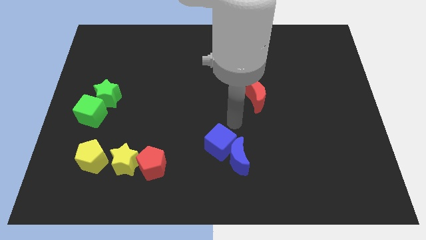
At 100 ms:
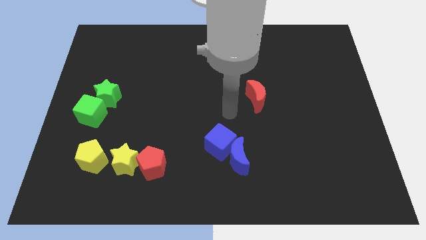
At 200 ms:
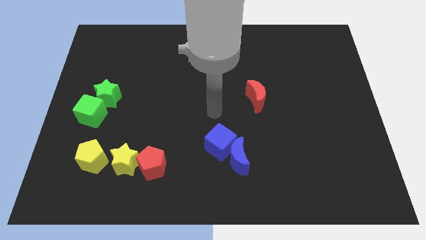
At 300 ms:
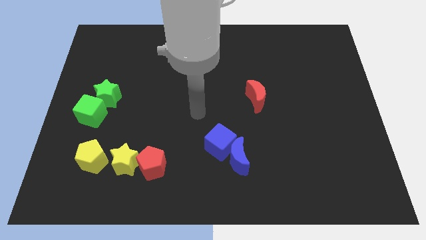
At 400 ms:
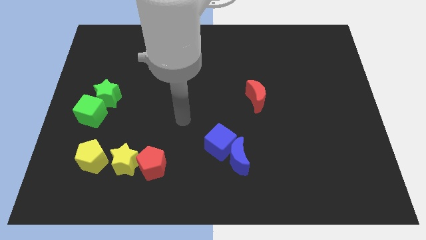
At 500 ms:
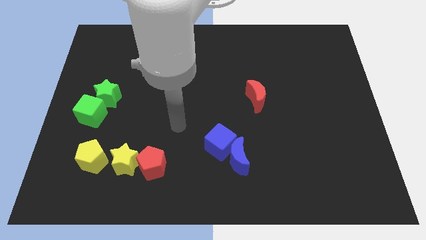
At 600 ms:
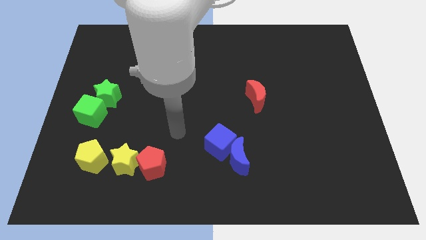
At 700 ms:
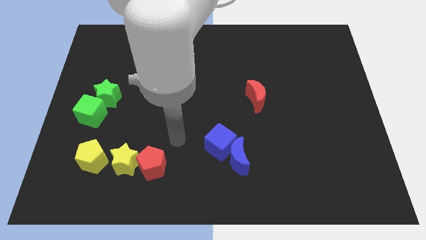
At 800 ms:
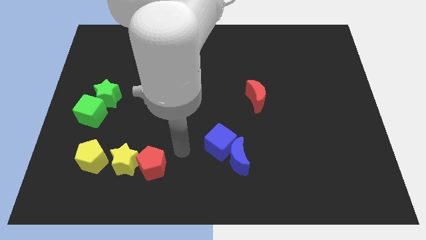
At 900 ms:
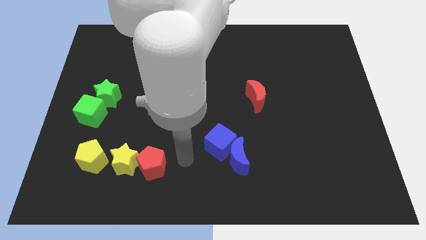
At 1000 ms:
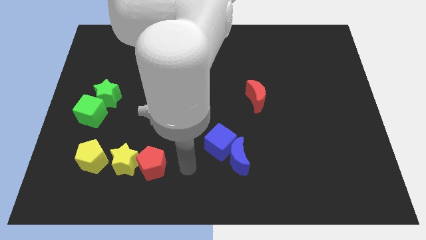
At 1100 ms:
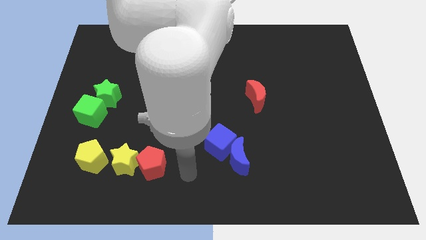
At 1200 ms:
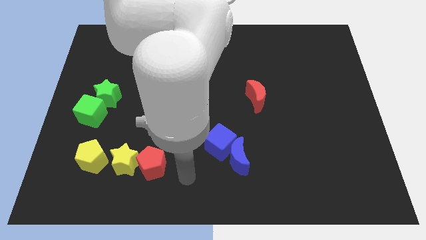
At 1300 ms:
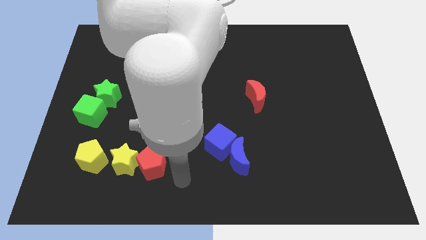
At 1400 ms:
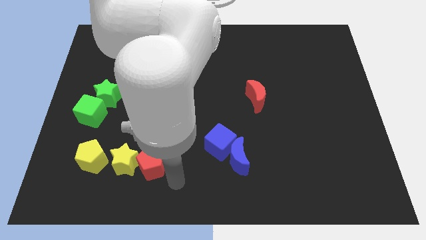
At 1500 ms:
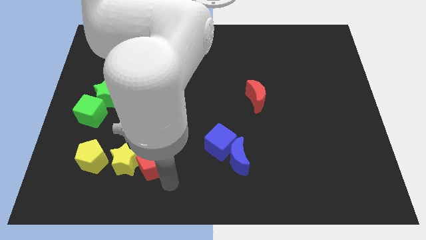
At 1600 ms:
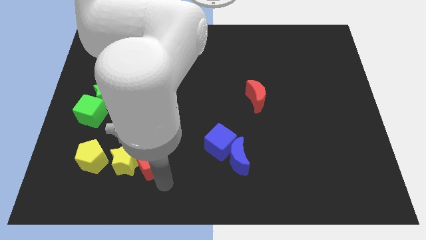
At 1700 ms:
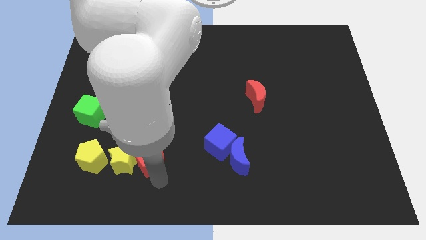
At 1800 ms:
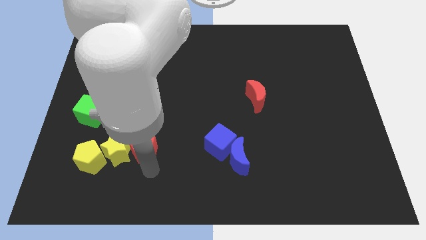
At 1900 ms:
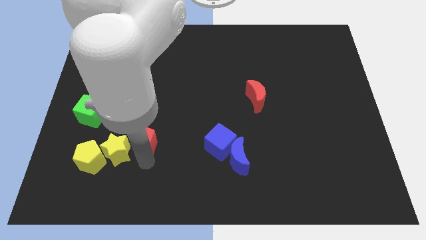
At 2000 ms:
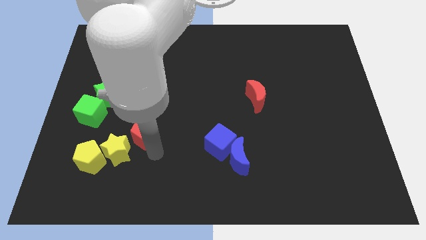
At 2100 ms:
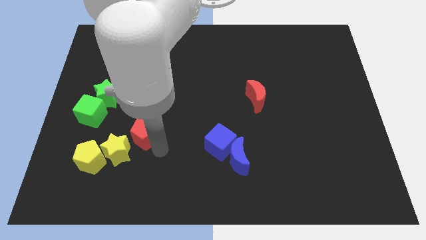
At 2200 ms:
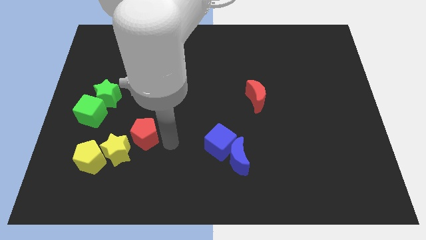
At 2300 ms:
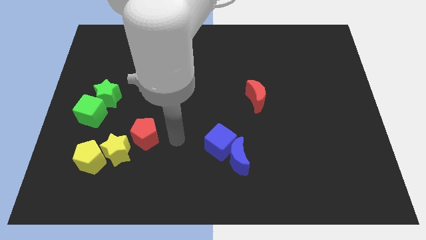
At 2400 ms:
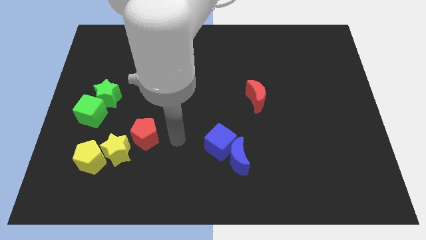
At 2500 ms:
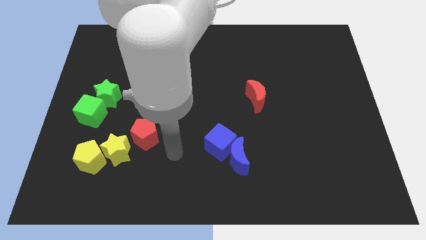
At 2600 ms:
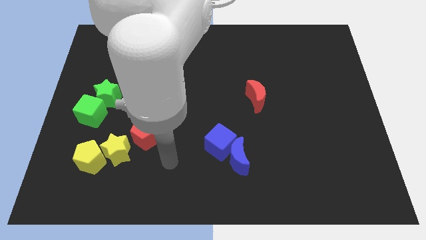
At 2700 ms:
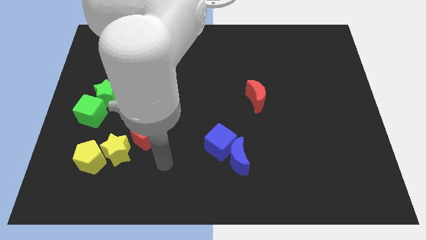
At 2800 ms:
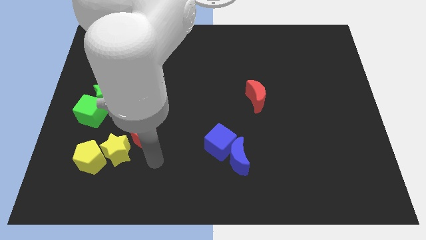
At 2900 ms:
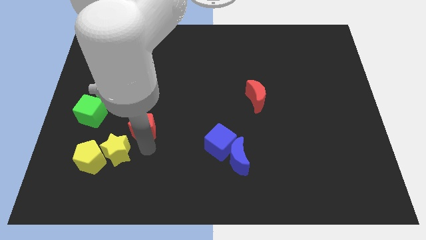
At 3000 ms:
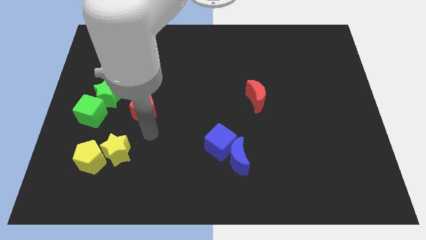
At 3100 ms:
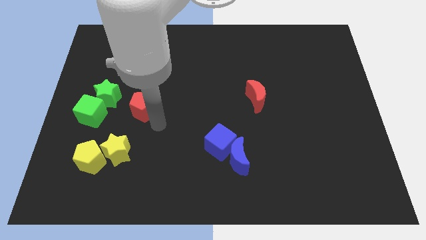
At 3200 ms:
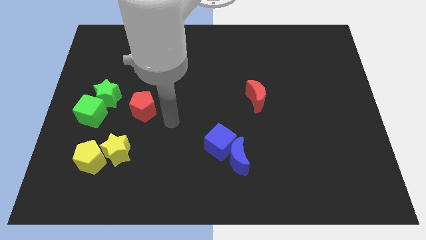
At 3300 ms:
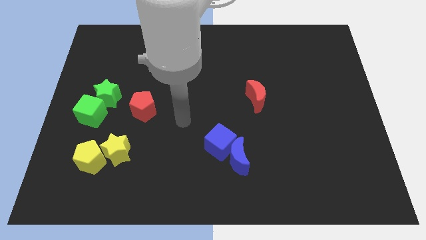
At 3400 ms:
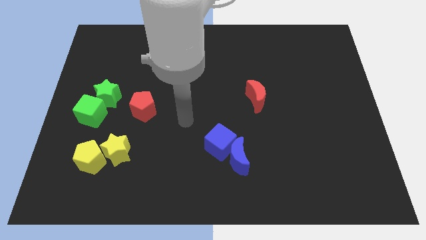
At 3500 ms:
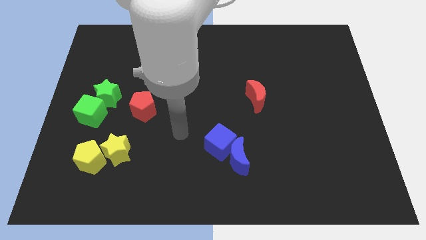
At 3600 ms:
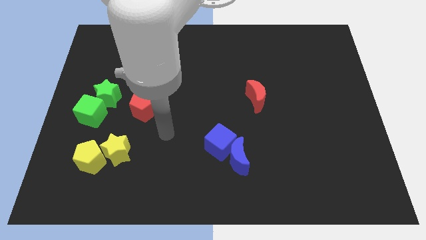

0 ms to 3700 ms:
separate the red pentagon from the right side of the yellow star

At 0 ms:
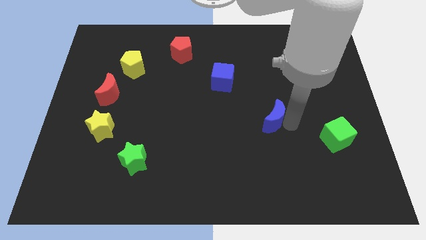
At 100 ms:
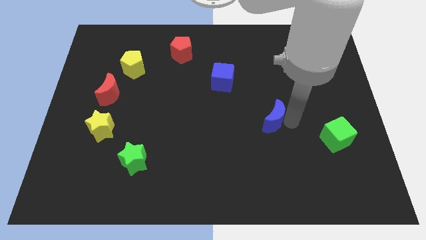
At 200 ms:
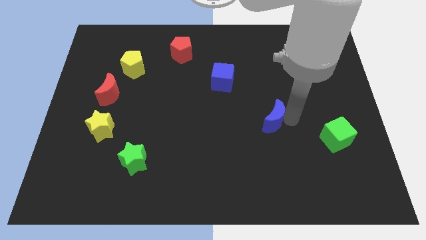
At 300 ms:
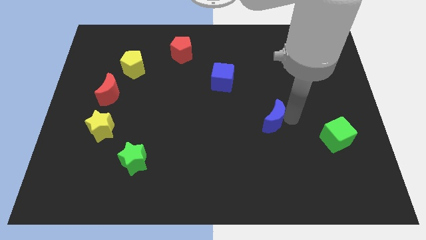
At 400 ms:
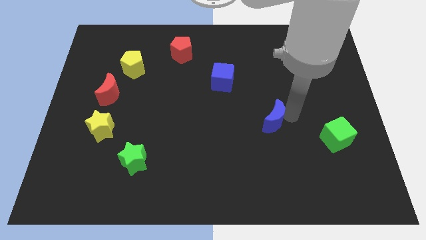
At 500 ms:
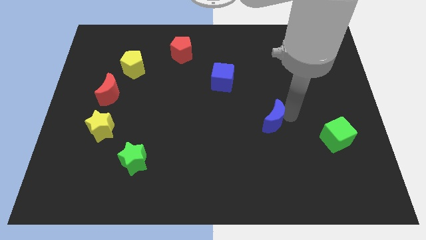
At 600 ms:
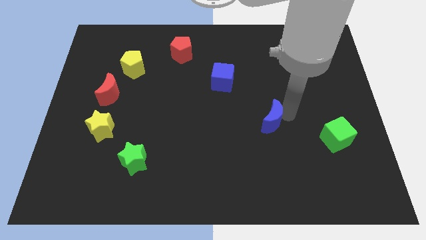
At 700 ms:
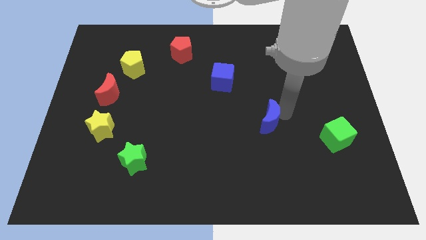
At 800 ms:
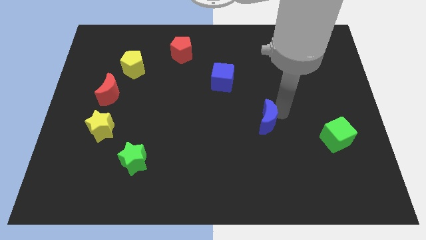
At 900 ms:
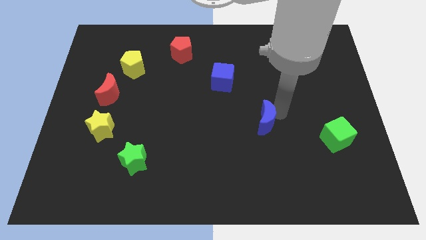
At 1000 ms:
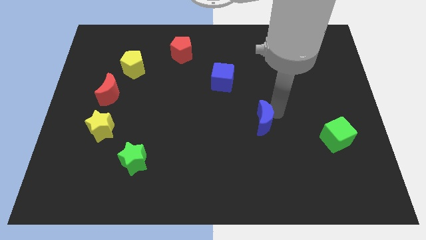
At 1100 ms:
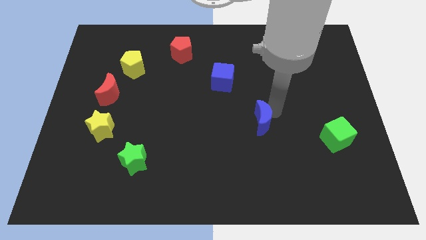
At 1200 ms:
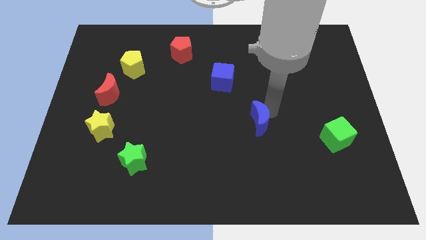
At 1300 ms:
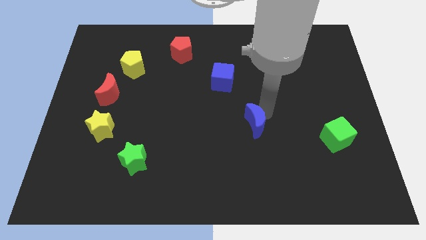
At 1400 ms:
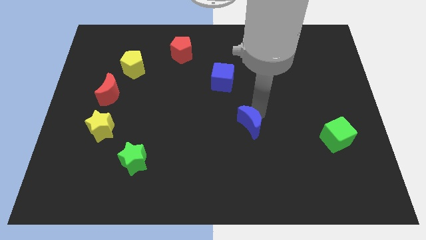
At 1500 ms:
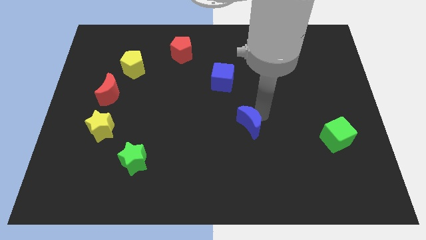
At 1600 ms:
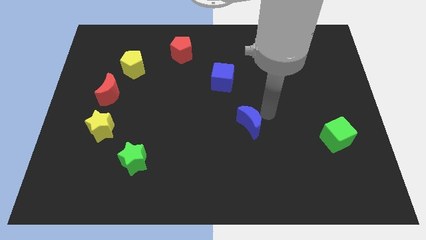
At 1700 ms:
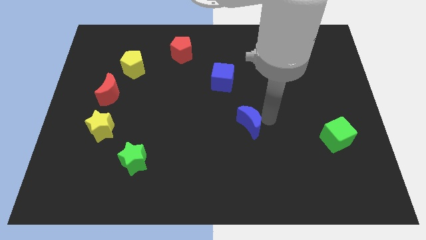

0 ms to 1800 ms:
push the blue moon below the blue cube

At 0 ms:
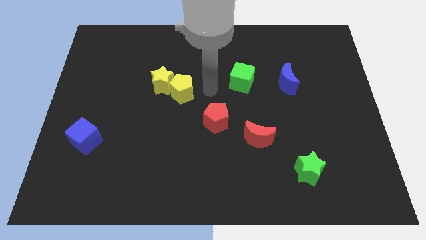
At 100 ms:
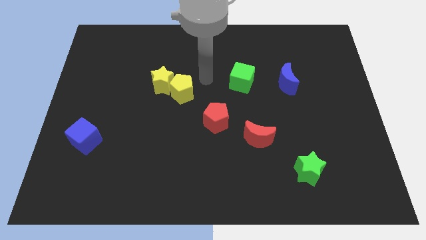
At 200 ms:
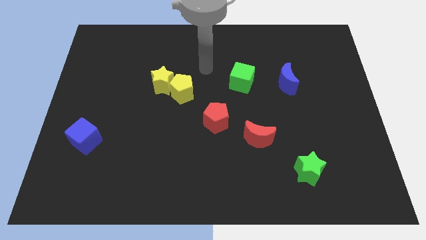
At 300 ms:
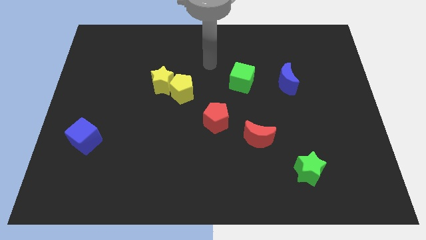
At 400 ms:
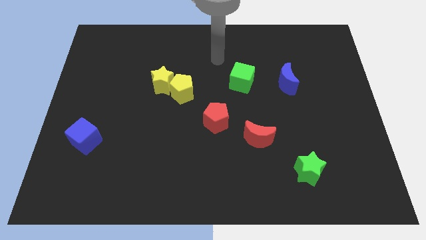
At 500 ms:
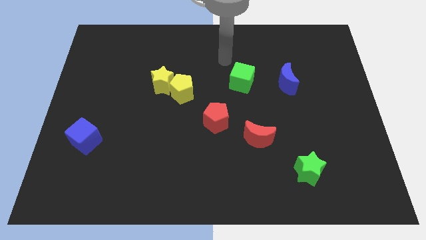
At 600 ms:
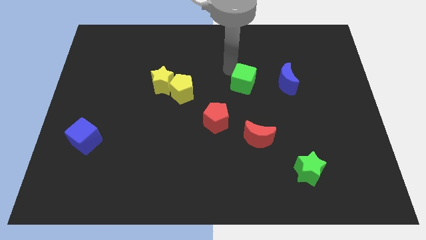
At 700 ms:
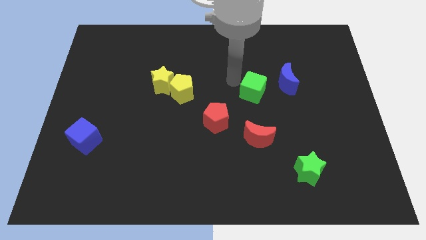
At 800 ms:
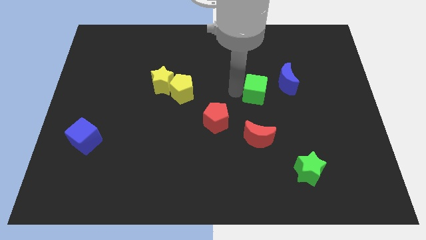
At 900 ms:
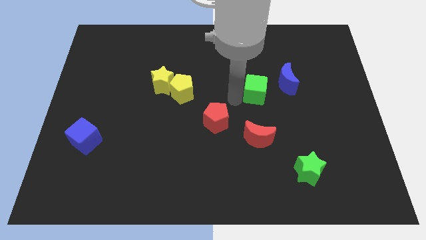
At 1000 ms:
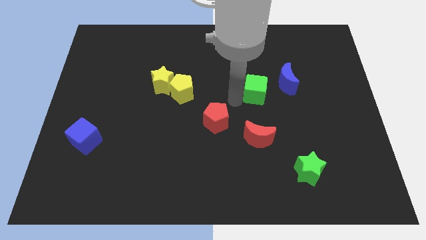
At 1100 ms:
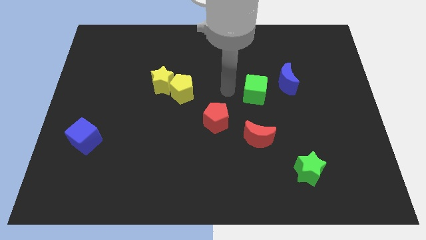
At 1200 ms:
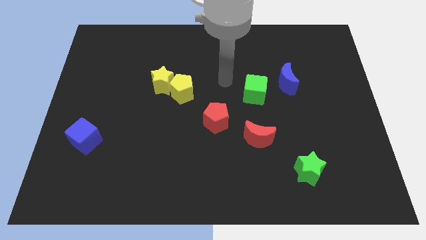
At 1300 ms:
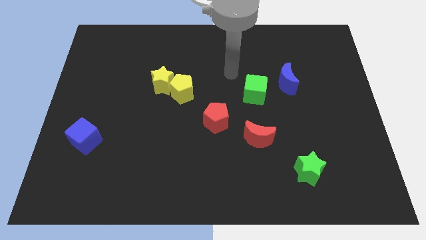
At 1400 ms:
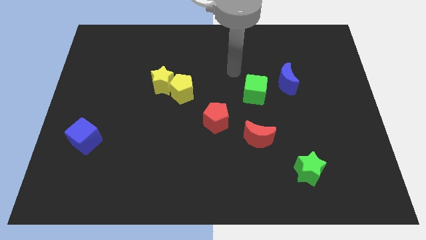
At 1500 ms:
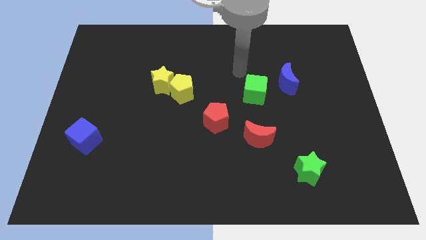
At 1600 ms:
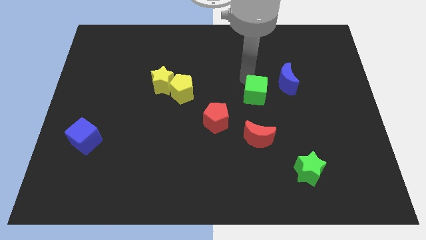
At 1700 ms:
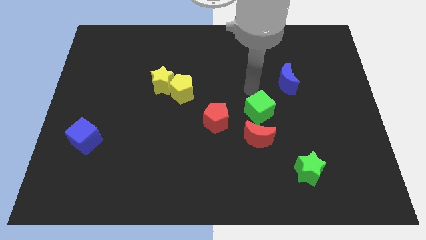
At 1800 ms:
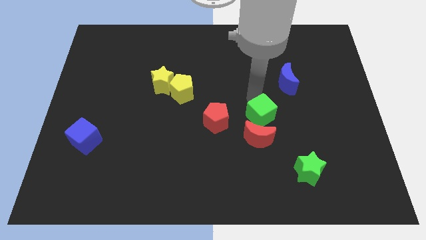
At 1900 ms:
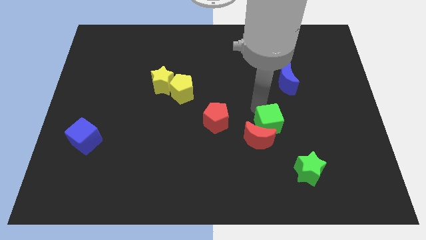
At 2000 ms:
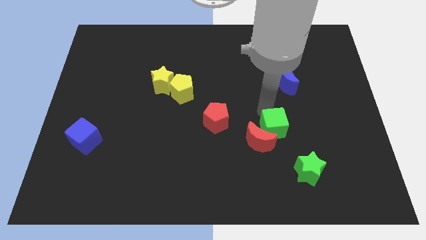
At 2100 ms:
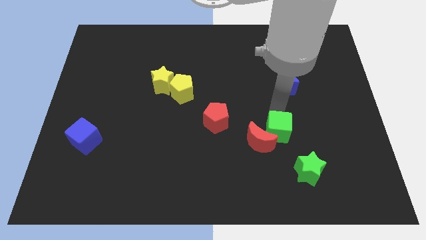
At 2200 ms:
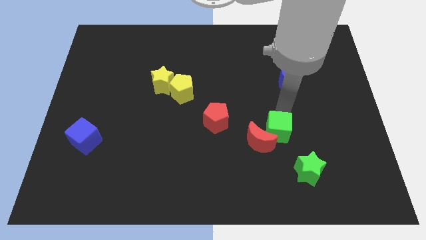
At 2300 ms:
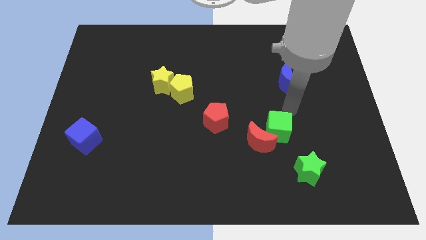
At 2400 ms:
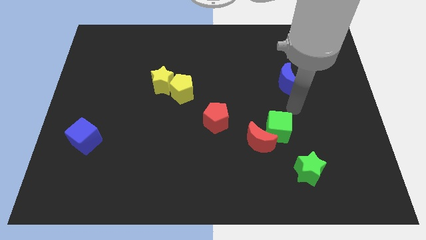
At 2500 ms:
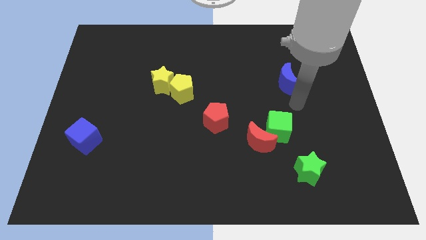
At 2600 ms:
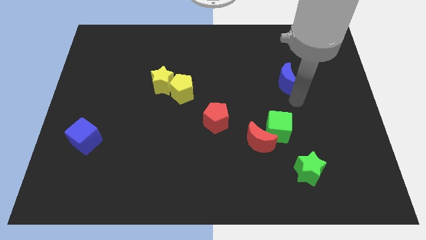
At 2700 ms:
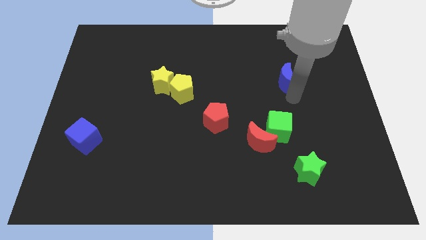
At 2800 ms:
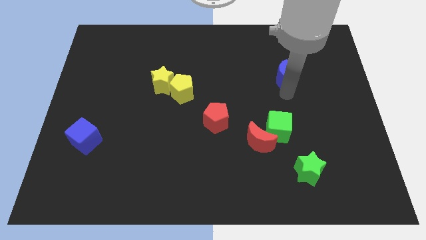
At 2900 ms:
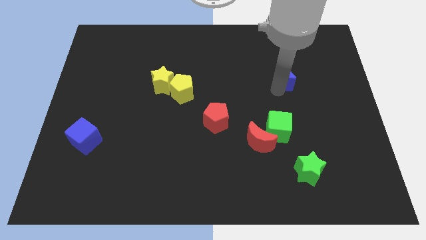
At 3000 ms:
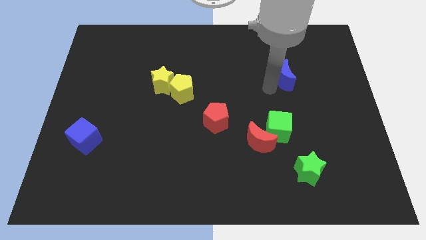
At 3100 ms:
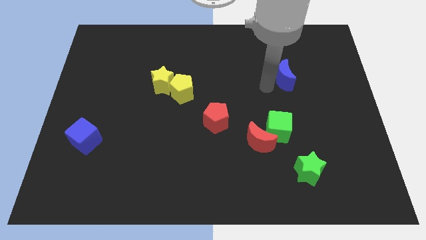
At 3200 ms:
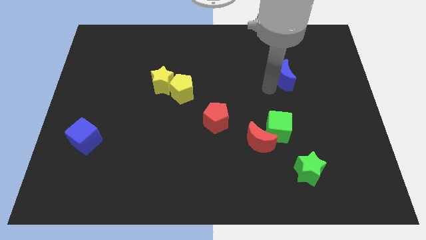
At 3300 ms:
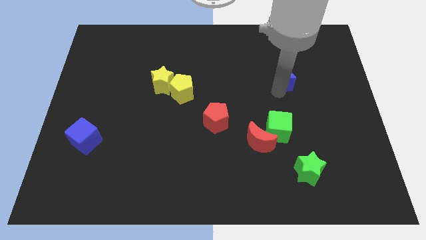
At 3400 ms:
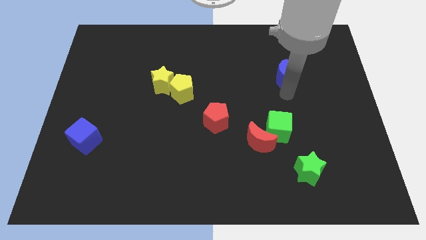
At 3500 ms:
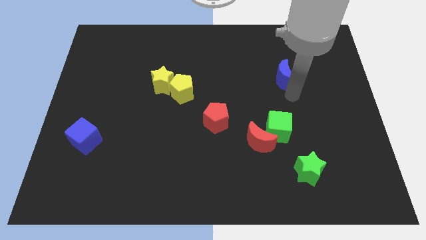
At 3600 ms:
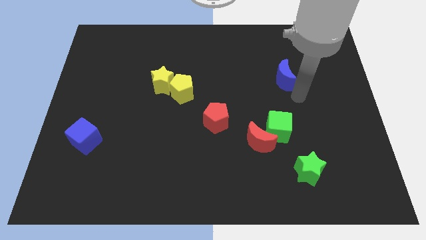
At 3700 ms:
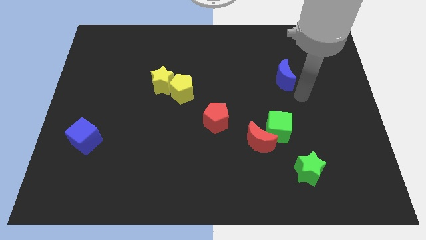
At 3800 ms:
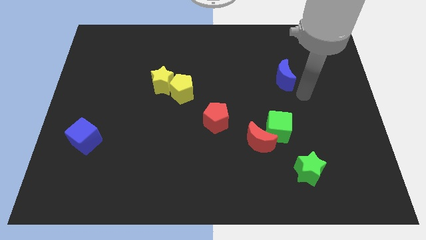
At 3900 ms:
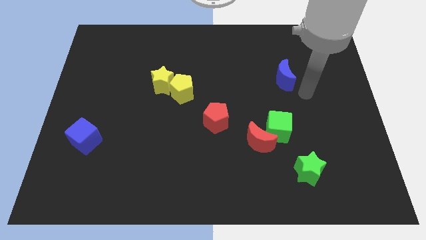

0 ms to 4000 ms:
slide the green cube into the red moon
